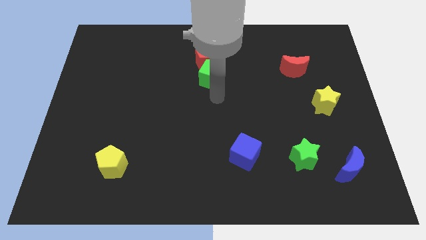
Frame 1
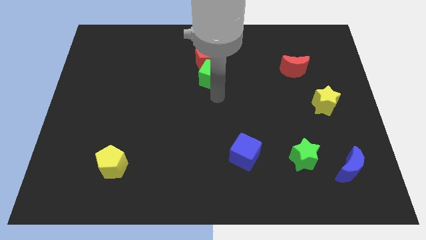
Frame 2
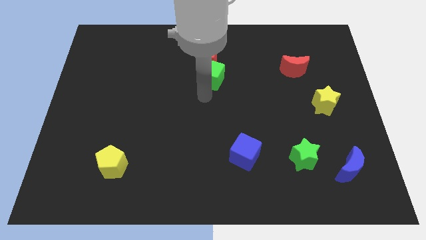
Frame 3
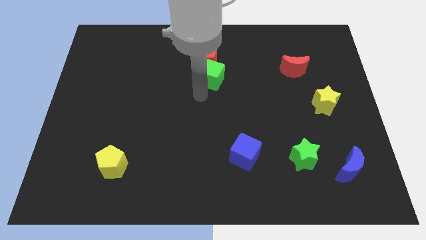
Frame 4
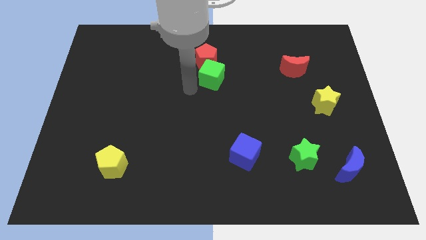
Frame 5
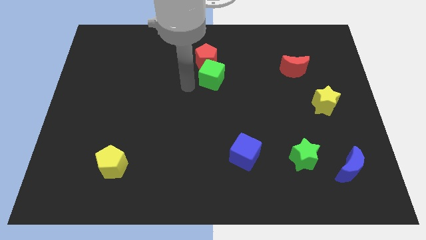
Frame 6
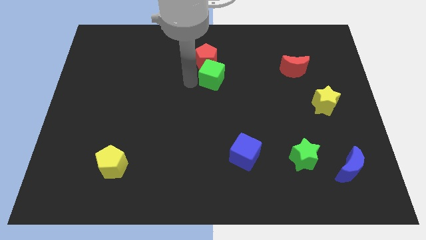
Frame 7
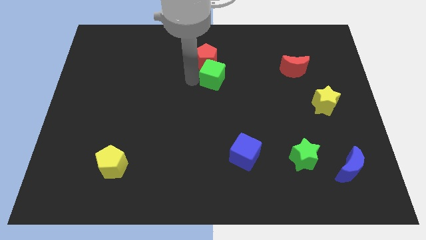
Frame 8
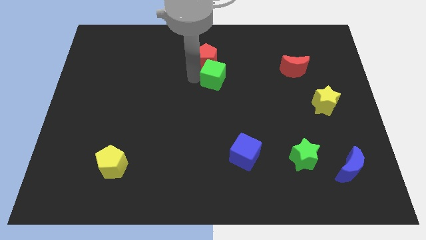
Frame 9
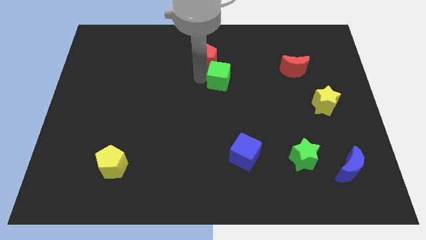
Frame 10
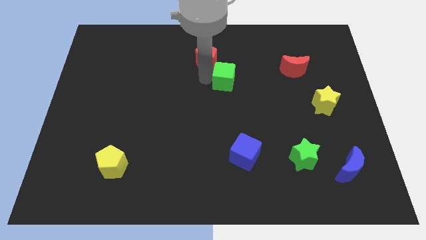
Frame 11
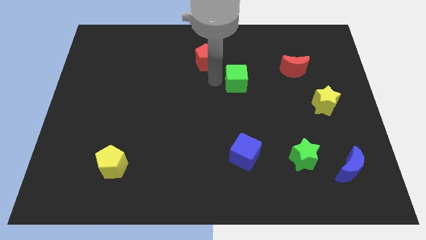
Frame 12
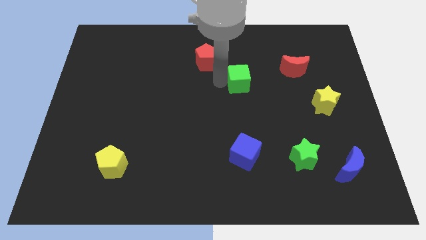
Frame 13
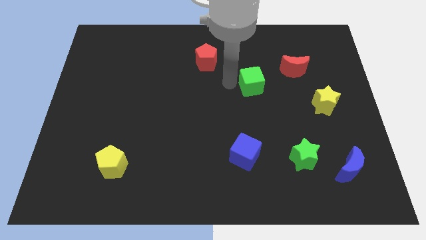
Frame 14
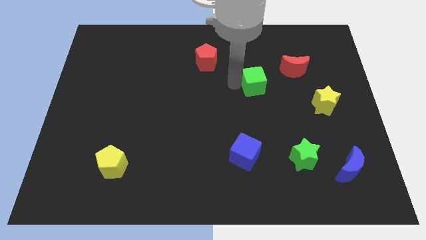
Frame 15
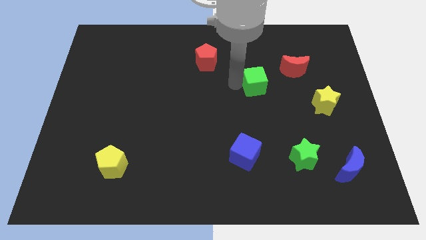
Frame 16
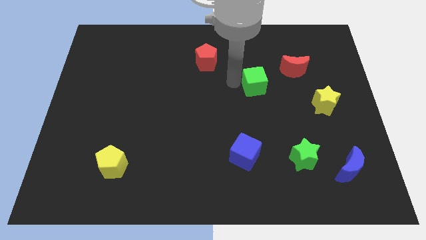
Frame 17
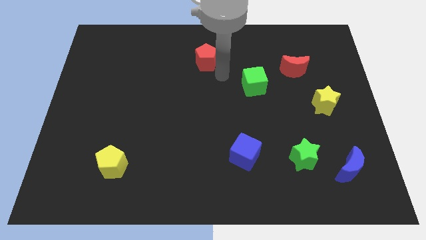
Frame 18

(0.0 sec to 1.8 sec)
separate the green cube from the red pentagon

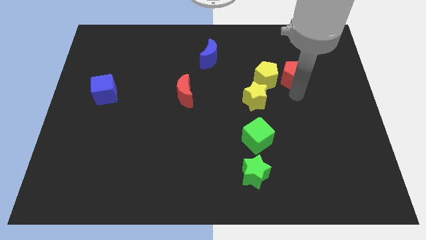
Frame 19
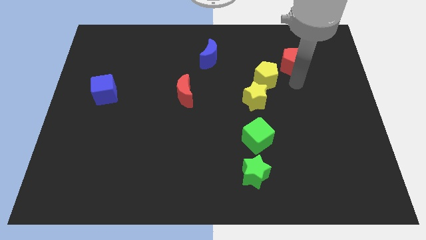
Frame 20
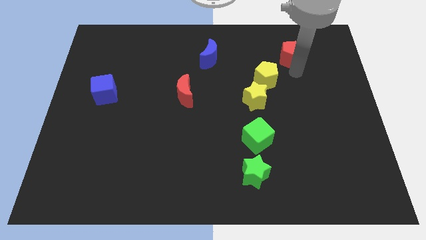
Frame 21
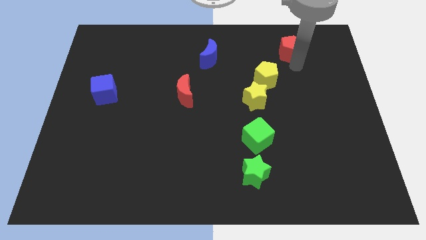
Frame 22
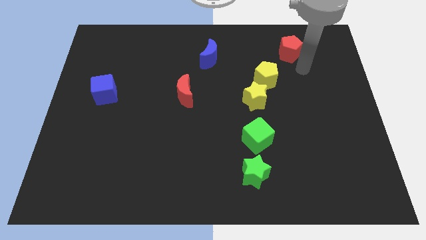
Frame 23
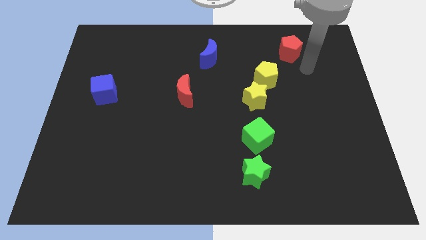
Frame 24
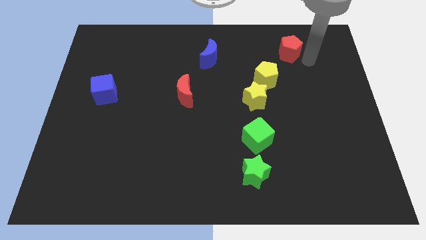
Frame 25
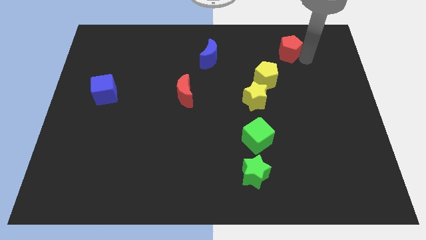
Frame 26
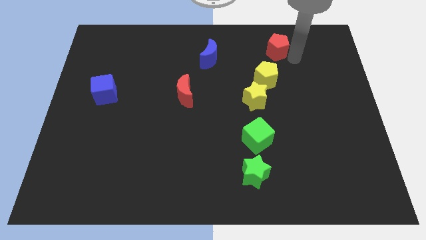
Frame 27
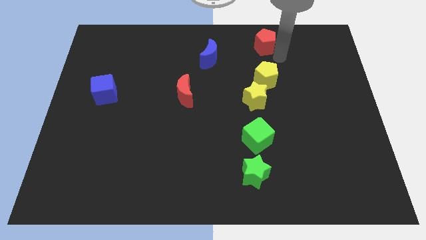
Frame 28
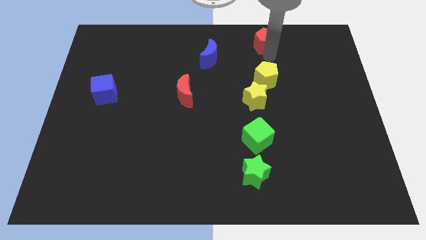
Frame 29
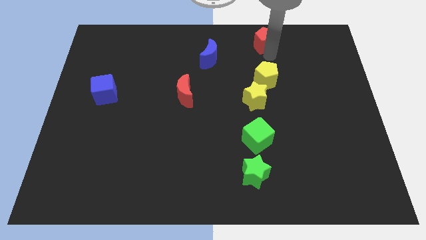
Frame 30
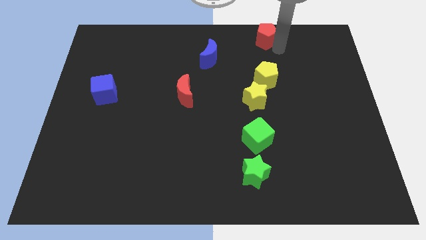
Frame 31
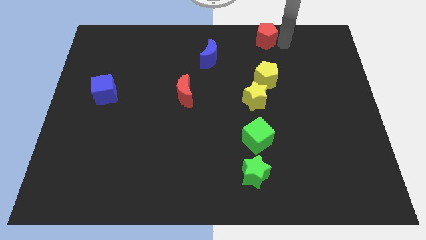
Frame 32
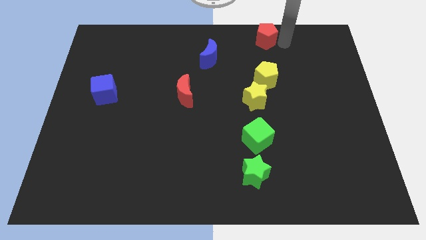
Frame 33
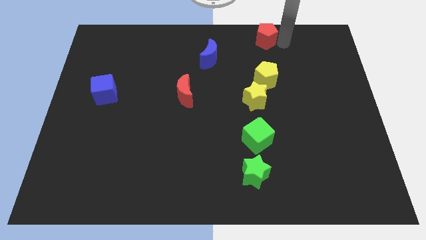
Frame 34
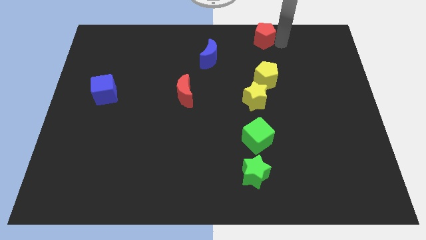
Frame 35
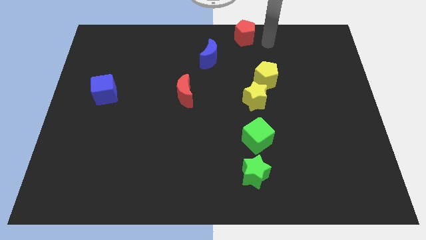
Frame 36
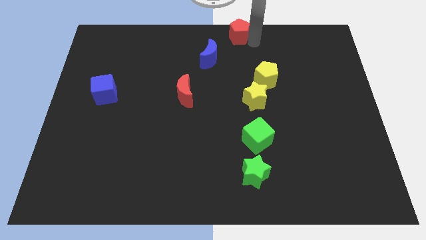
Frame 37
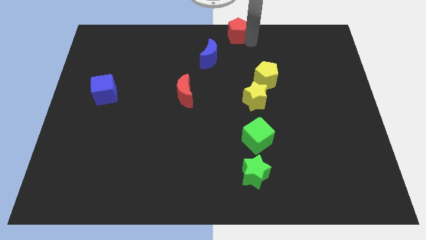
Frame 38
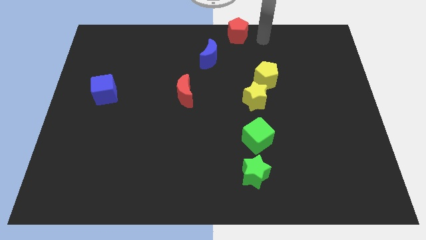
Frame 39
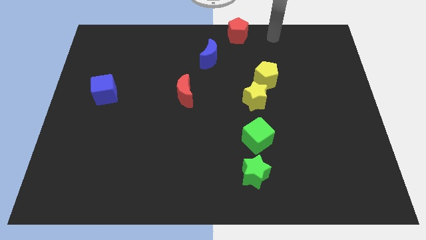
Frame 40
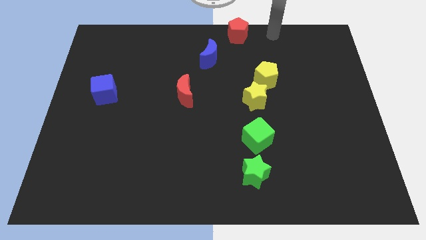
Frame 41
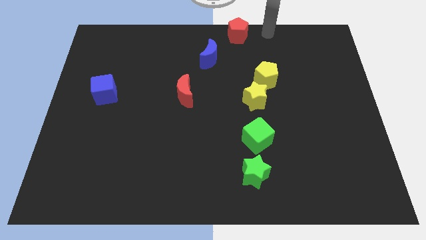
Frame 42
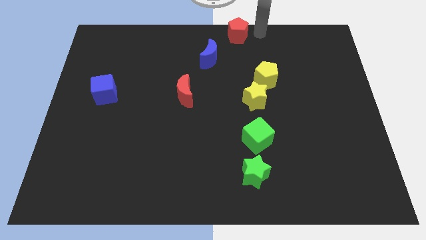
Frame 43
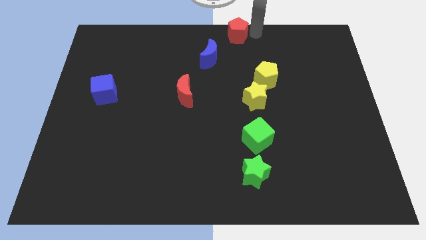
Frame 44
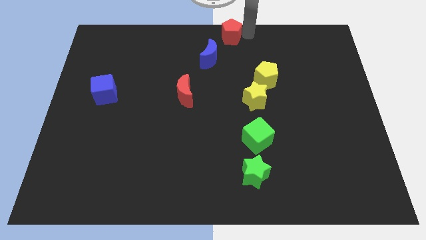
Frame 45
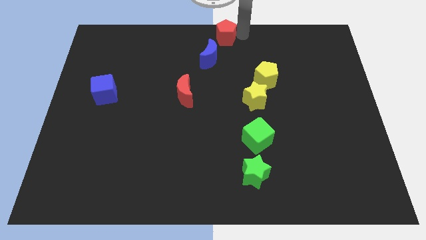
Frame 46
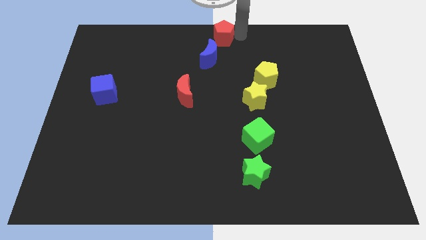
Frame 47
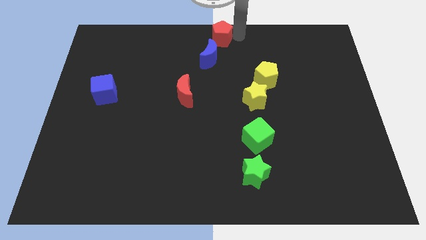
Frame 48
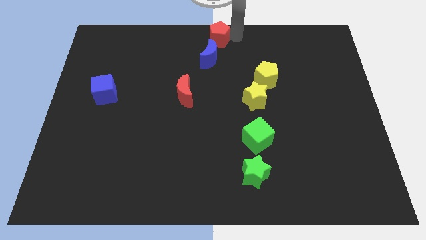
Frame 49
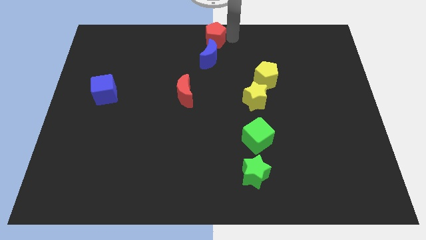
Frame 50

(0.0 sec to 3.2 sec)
place the red pentagon above the blue moon

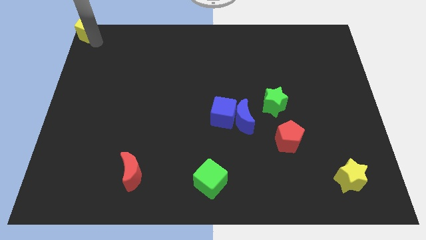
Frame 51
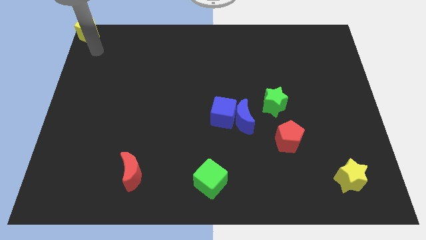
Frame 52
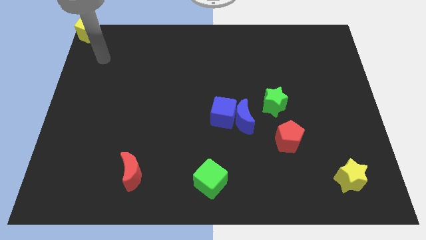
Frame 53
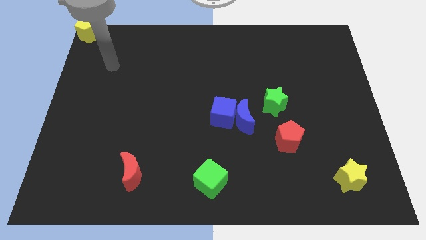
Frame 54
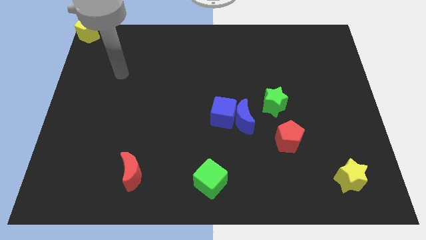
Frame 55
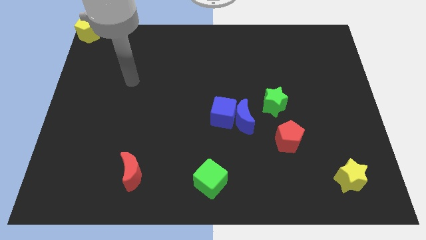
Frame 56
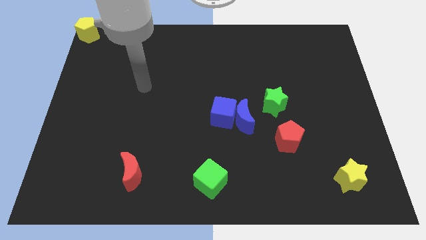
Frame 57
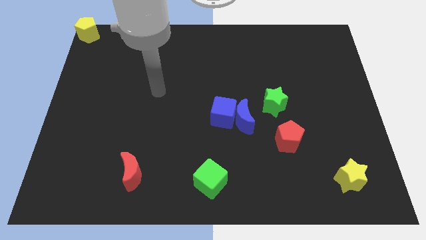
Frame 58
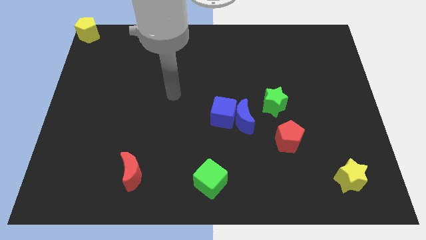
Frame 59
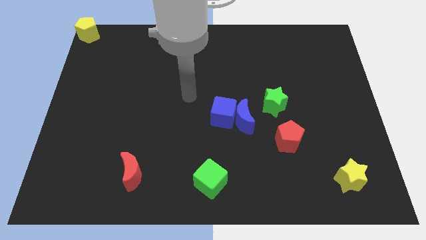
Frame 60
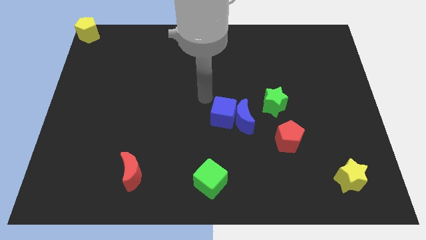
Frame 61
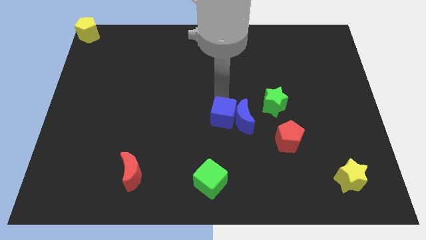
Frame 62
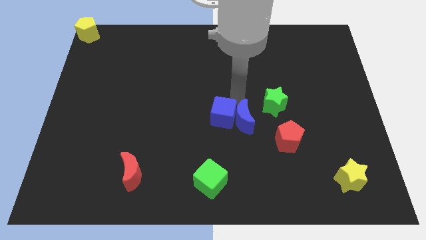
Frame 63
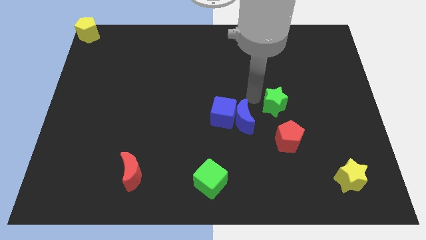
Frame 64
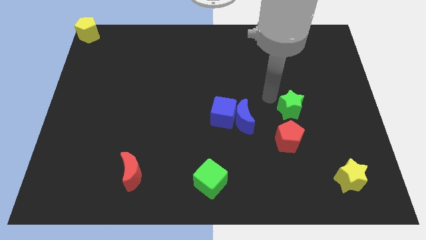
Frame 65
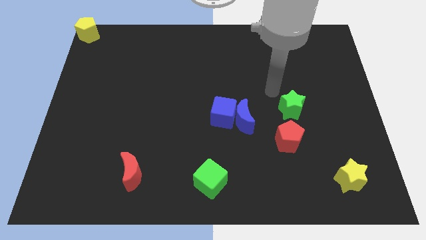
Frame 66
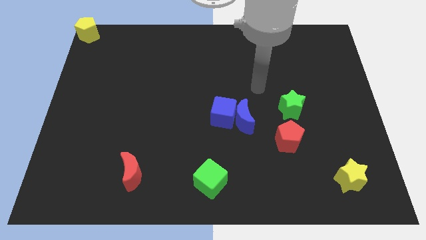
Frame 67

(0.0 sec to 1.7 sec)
place the green star vertically above the red pentagon

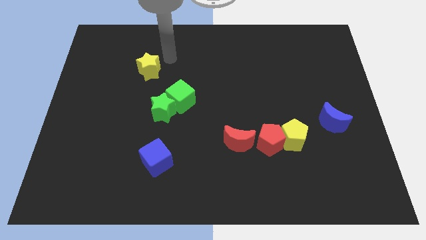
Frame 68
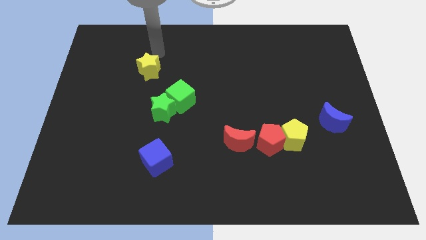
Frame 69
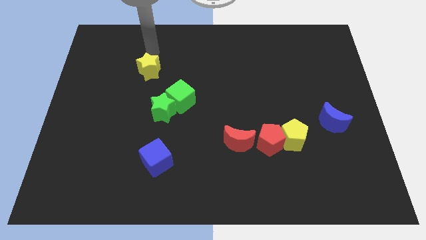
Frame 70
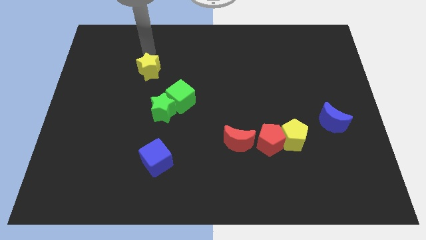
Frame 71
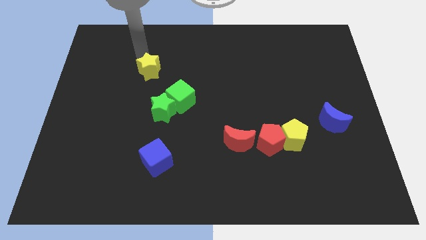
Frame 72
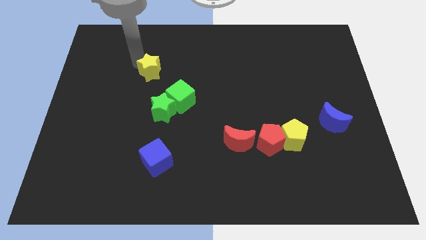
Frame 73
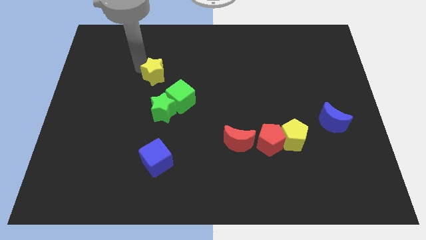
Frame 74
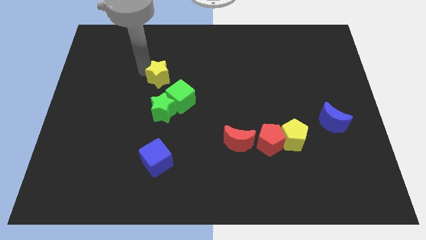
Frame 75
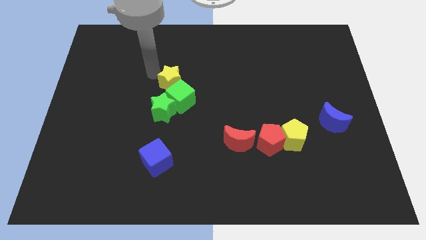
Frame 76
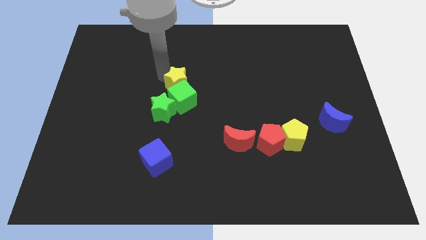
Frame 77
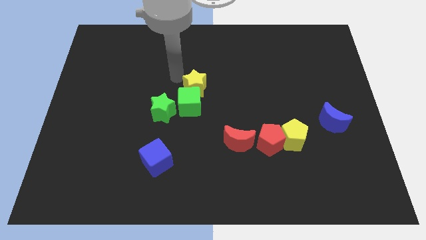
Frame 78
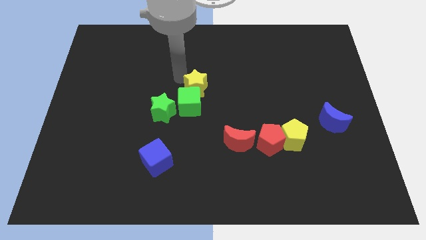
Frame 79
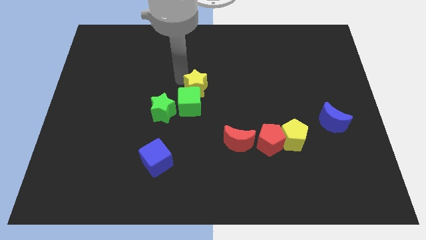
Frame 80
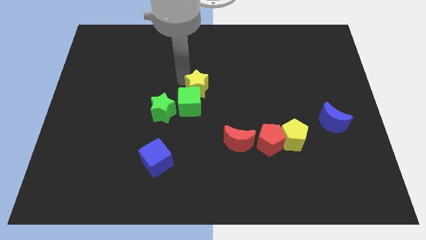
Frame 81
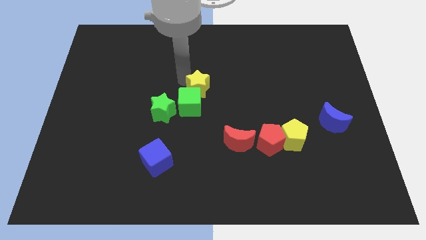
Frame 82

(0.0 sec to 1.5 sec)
move the yellow star into the green cube

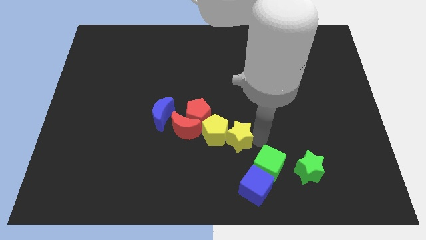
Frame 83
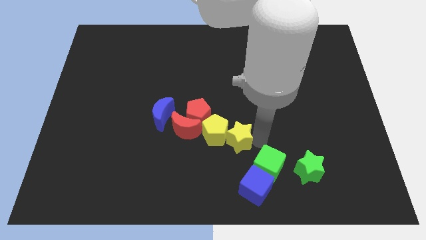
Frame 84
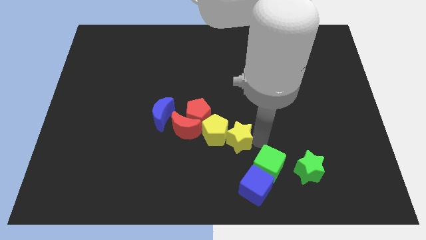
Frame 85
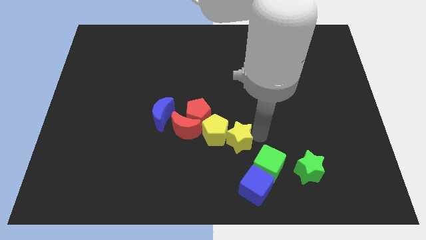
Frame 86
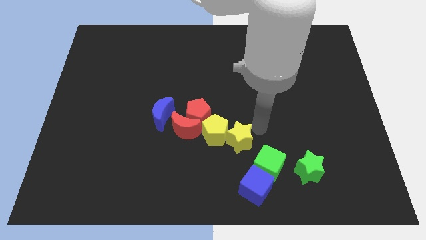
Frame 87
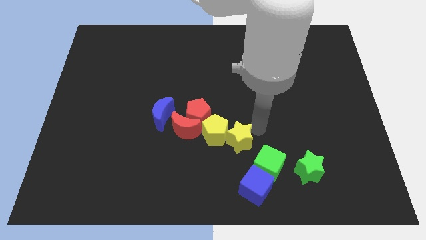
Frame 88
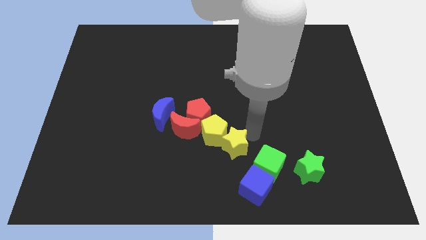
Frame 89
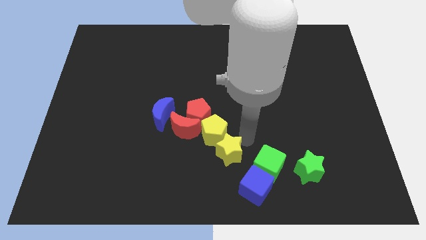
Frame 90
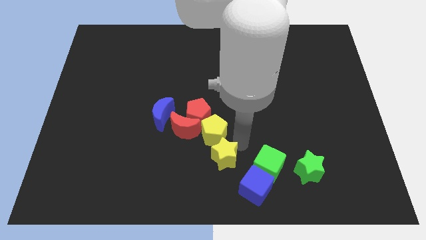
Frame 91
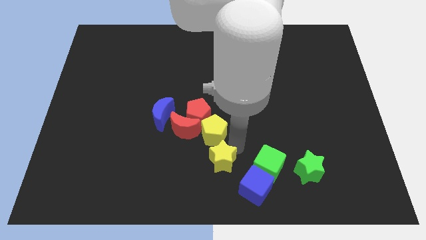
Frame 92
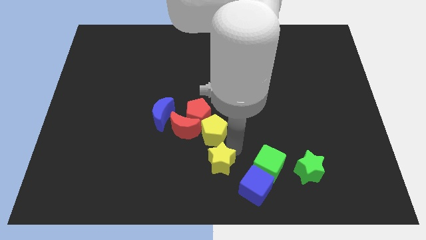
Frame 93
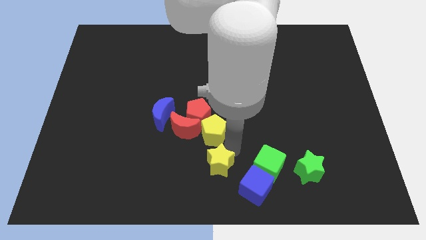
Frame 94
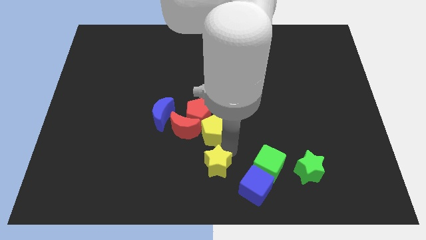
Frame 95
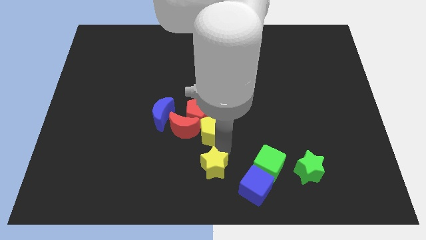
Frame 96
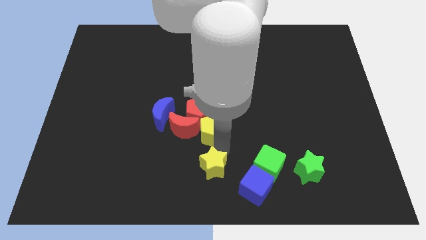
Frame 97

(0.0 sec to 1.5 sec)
move the yellow star away from the yellow pentagon
